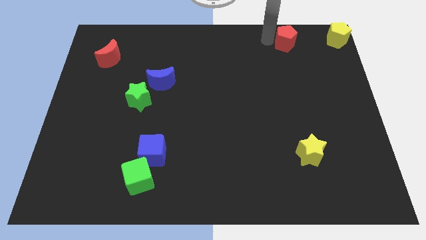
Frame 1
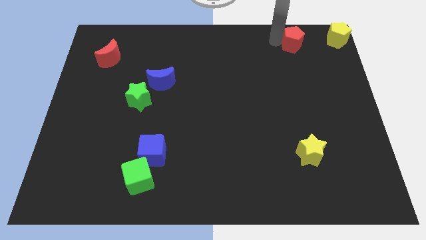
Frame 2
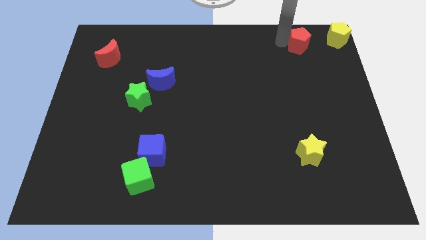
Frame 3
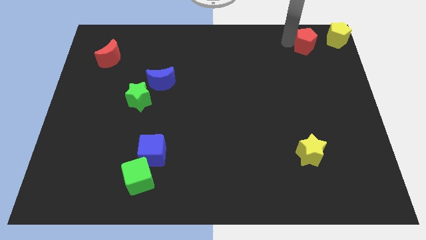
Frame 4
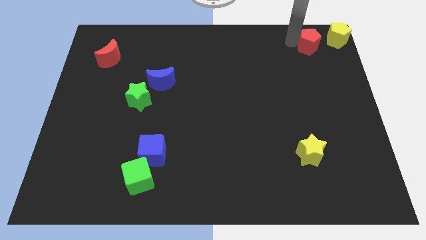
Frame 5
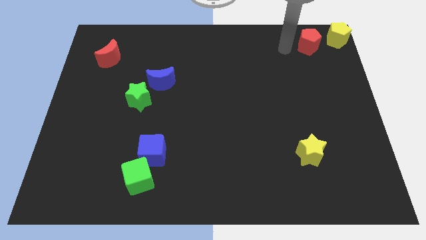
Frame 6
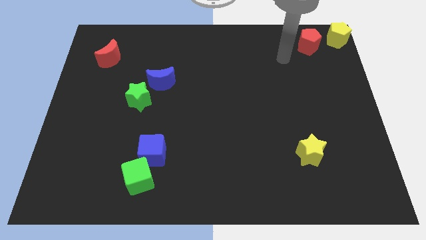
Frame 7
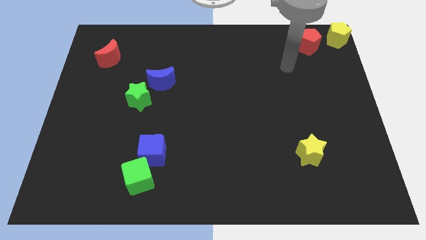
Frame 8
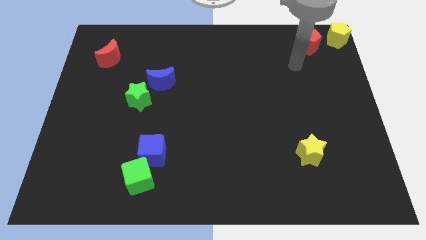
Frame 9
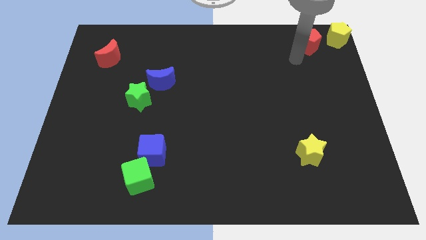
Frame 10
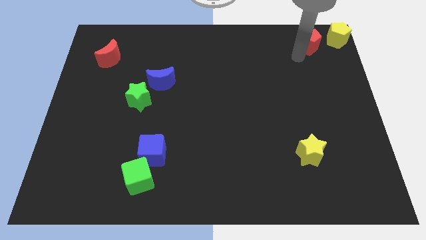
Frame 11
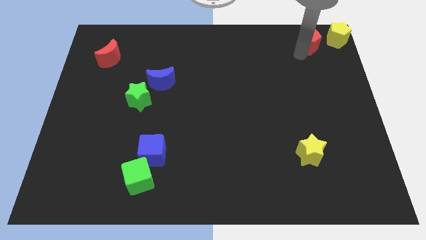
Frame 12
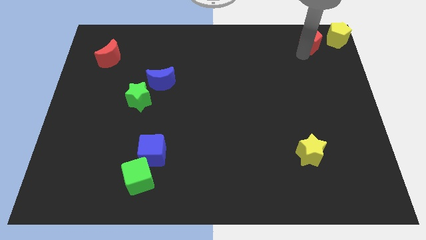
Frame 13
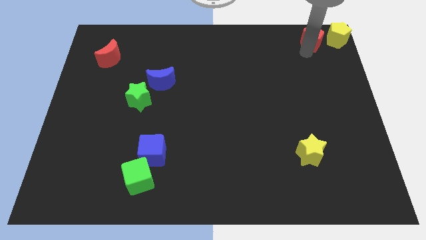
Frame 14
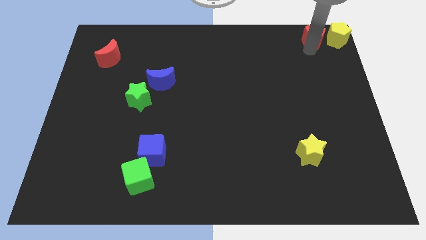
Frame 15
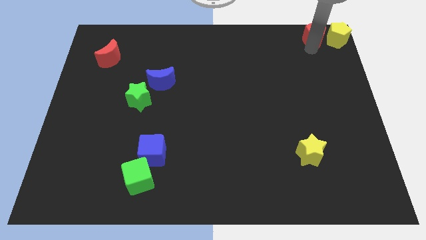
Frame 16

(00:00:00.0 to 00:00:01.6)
place the red pentagon to the left of the yellow pentagon

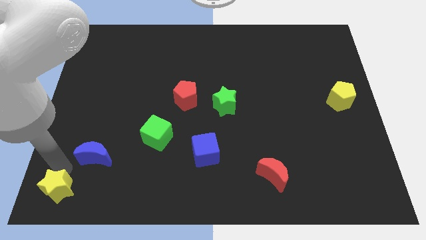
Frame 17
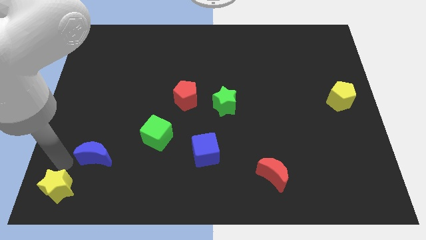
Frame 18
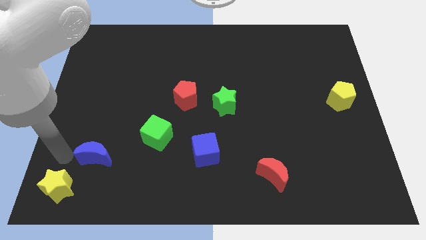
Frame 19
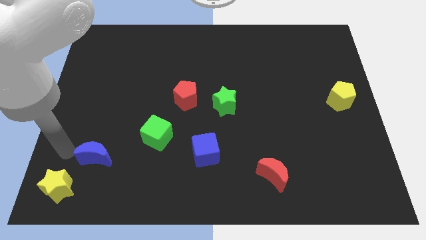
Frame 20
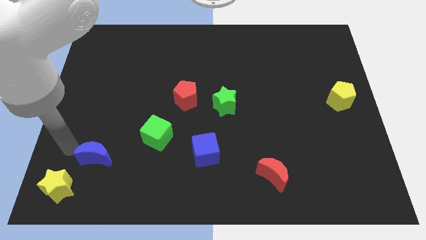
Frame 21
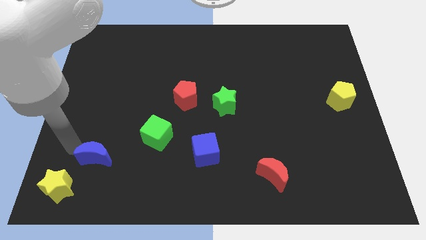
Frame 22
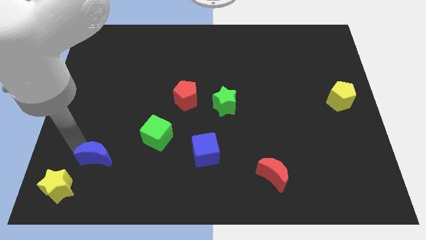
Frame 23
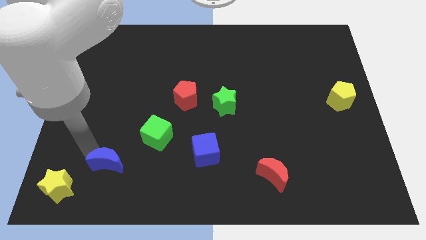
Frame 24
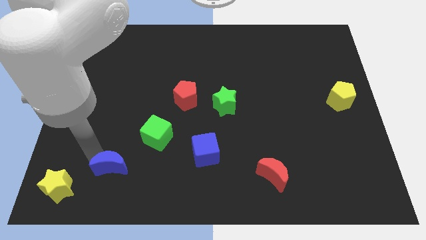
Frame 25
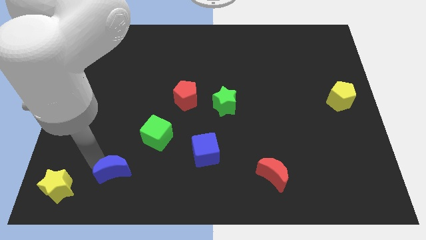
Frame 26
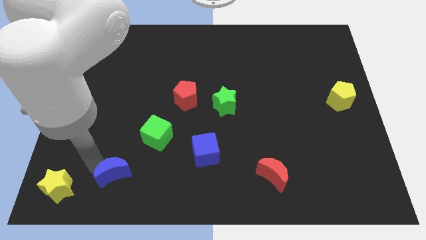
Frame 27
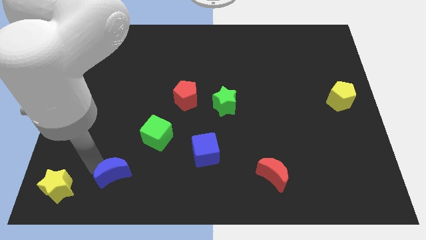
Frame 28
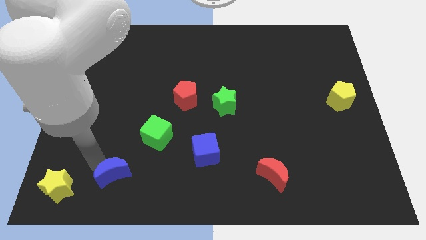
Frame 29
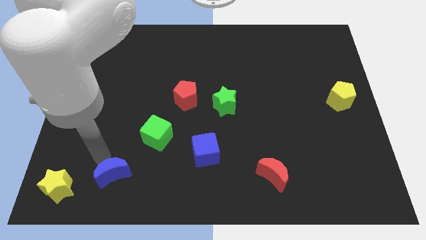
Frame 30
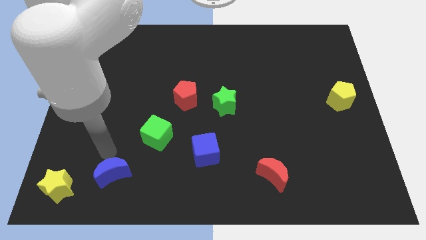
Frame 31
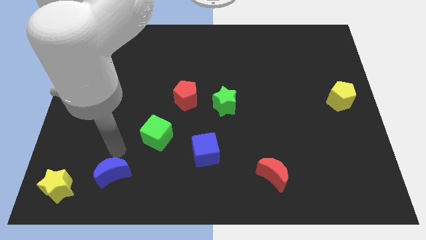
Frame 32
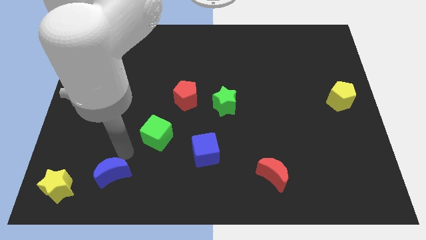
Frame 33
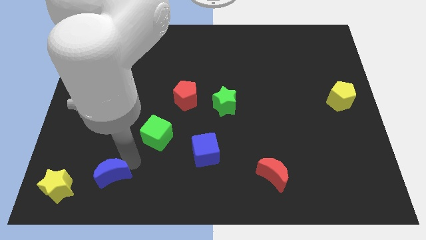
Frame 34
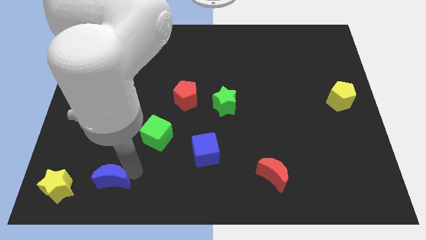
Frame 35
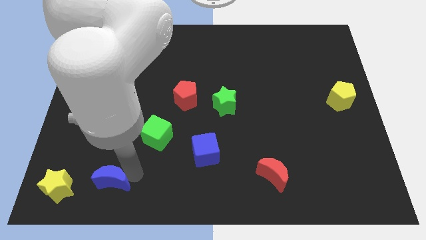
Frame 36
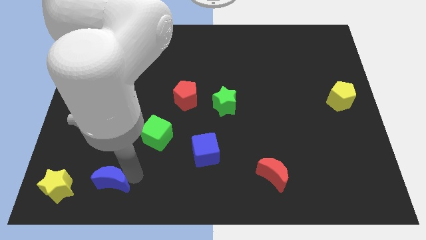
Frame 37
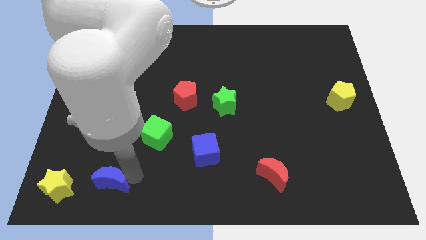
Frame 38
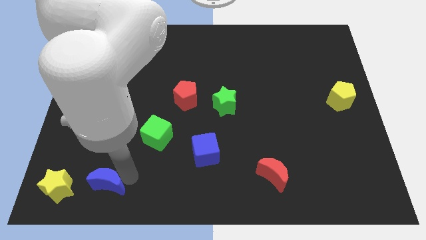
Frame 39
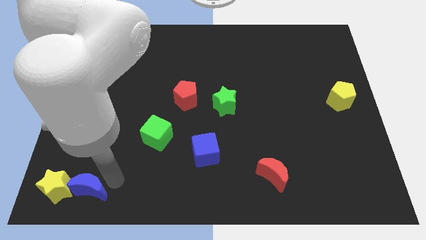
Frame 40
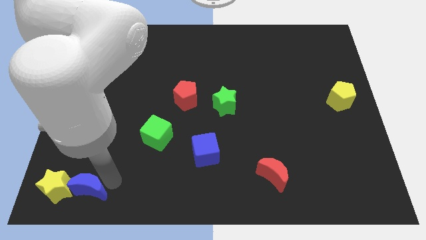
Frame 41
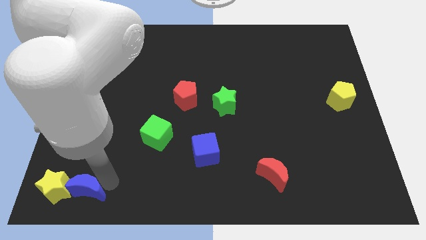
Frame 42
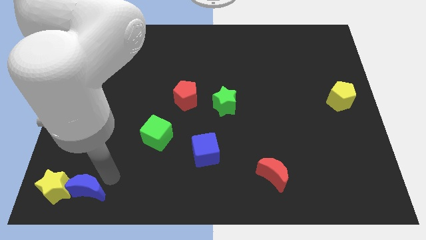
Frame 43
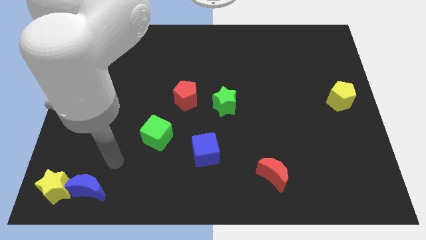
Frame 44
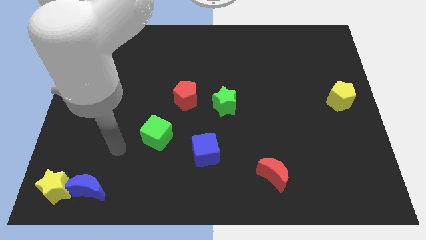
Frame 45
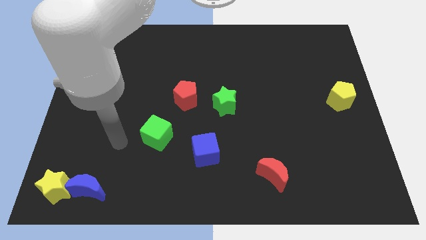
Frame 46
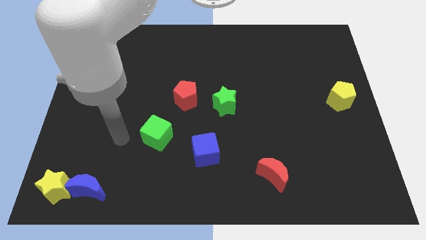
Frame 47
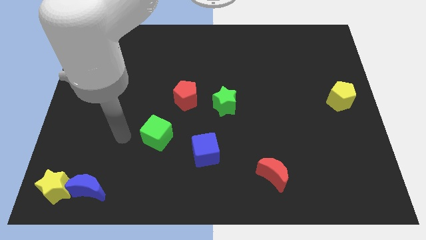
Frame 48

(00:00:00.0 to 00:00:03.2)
put the blue crescent on the right side of the yellow star

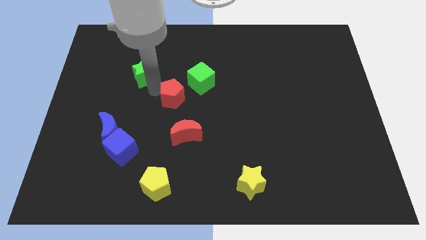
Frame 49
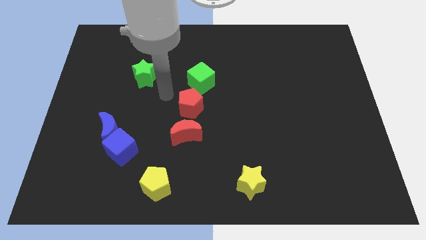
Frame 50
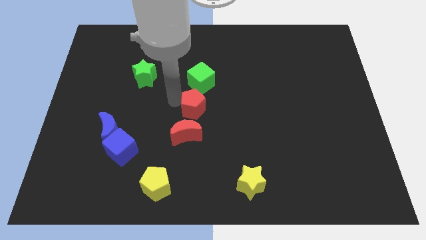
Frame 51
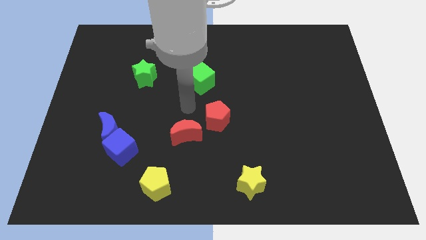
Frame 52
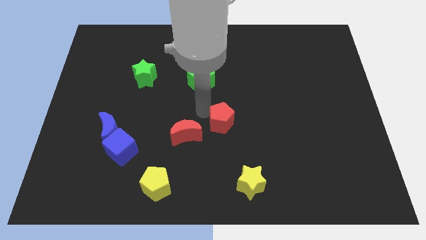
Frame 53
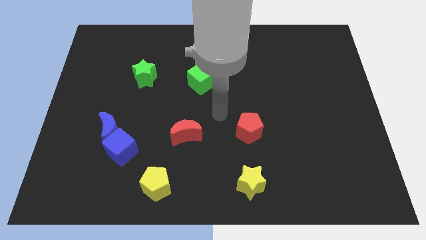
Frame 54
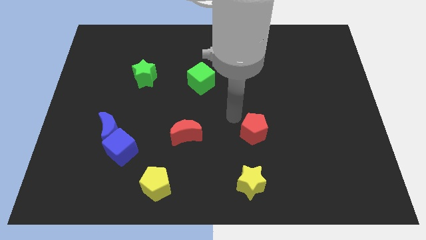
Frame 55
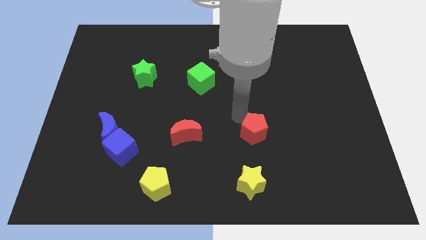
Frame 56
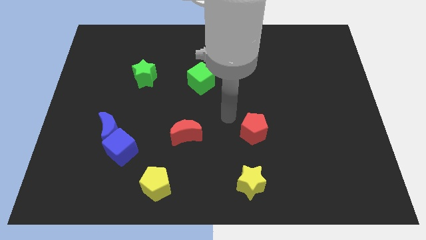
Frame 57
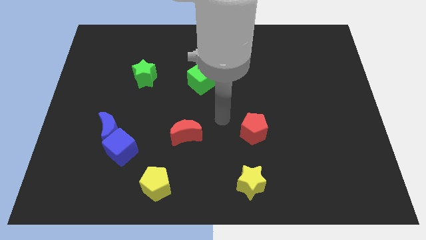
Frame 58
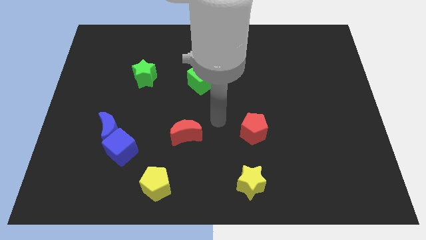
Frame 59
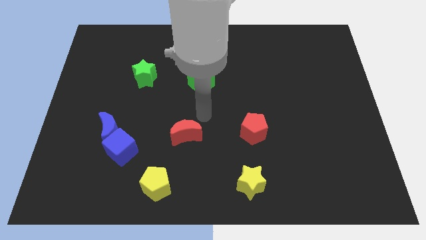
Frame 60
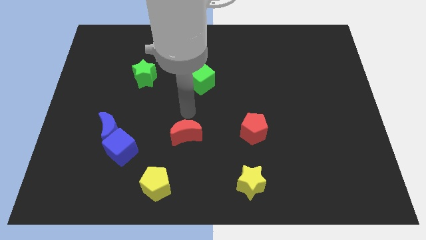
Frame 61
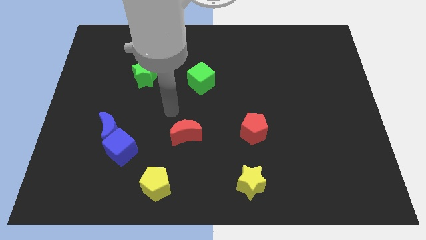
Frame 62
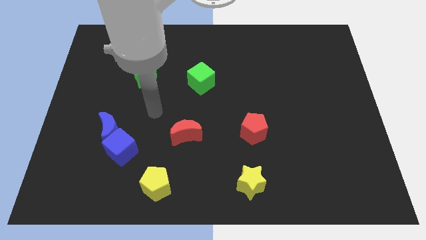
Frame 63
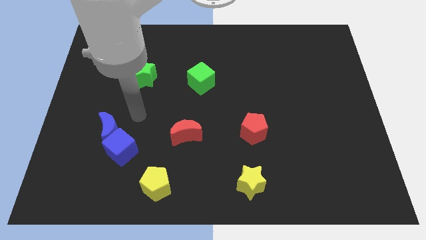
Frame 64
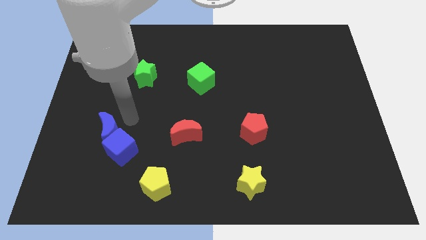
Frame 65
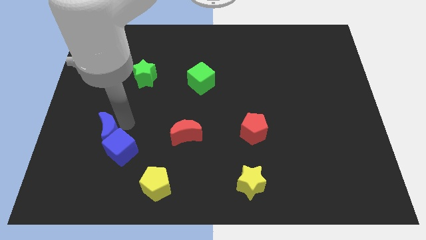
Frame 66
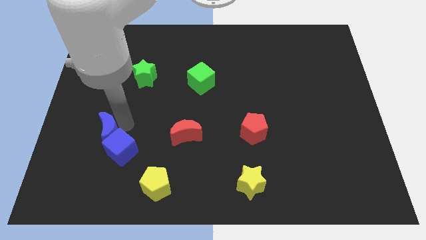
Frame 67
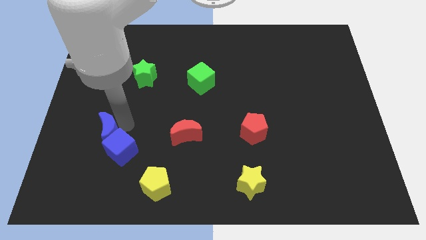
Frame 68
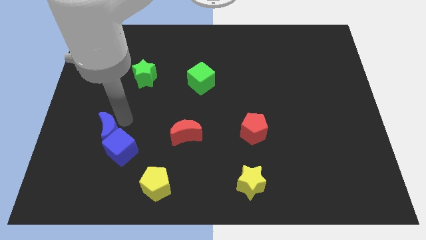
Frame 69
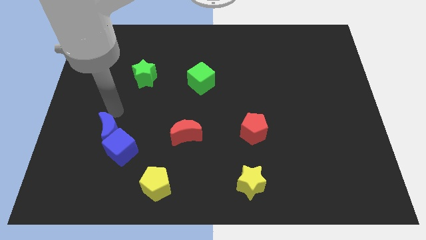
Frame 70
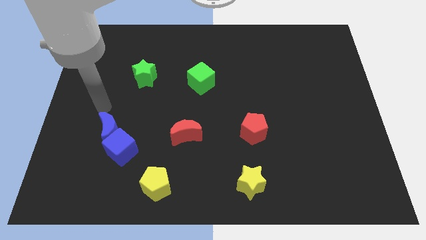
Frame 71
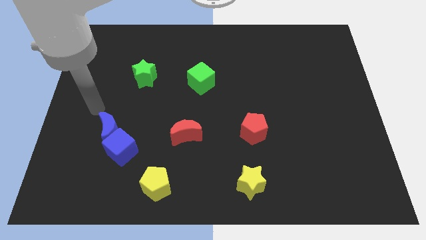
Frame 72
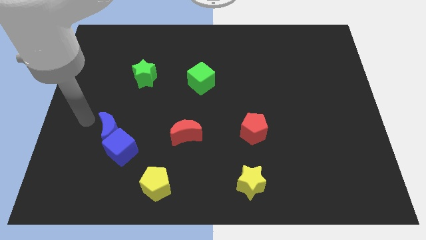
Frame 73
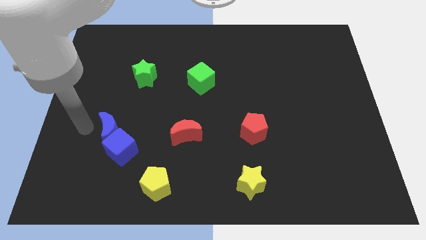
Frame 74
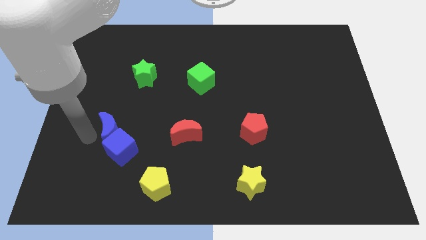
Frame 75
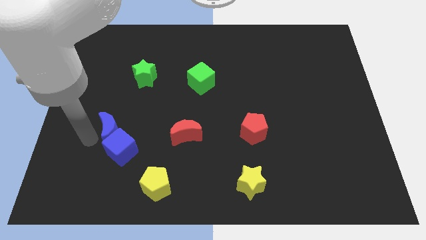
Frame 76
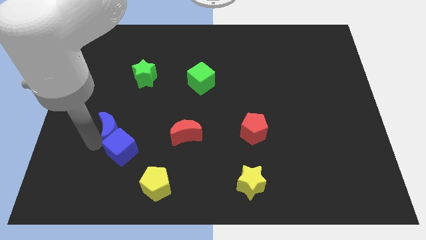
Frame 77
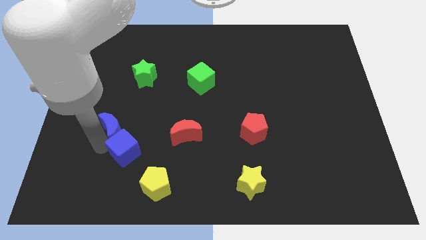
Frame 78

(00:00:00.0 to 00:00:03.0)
place the arm near the blue blocks

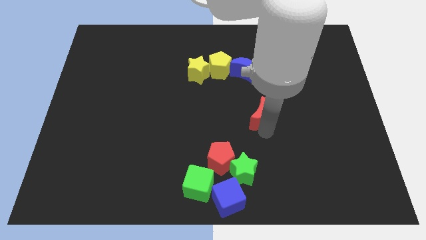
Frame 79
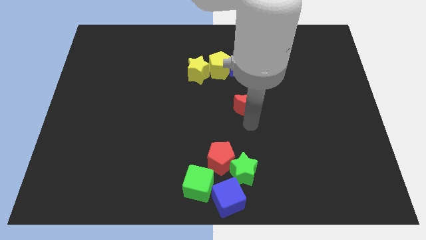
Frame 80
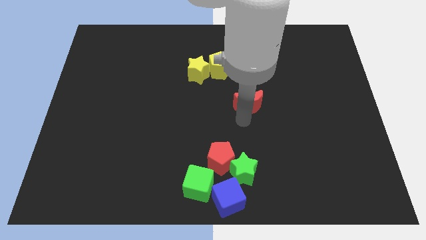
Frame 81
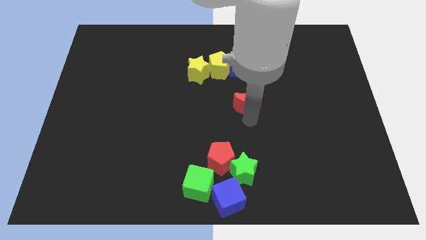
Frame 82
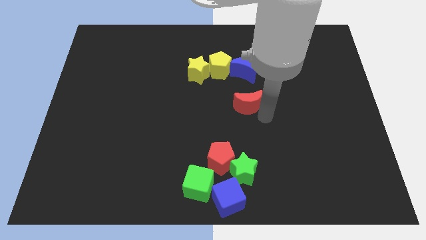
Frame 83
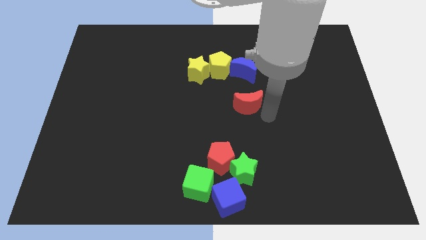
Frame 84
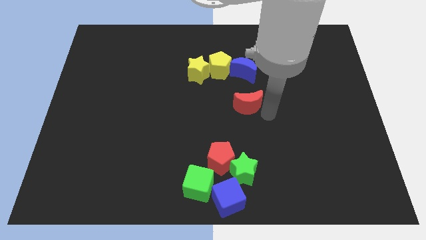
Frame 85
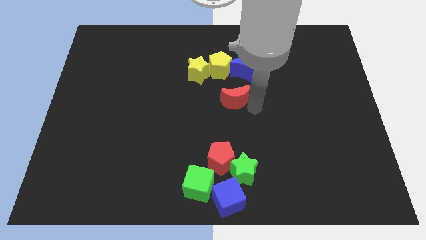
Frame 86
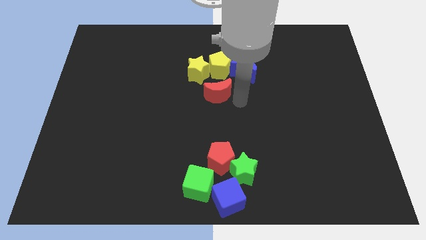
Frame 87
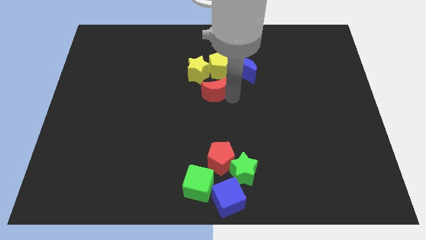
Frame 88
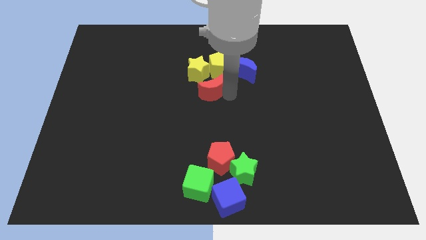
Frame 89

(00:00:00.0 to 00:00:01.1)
move the red crescent slightly bottom right of the yellow star

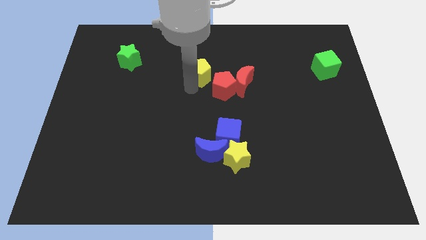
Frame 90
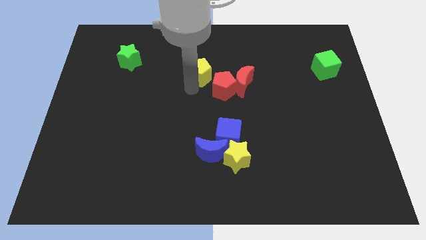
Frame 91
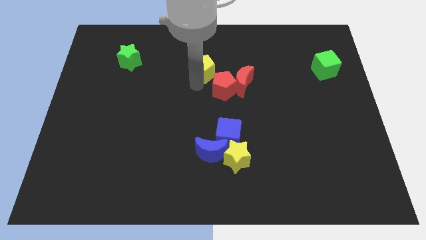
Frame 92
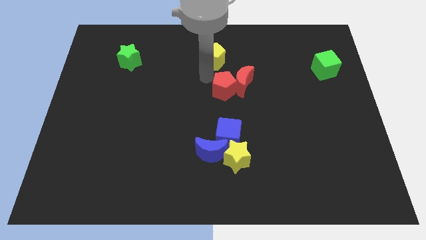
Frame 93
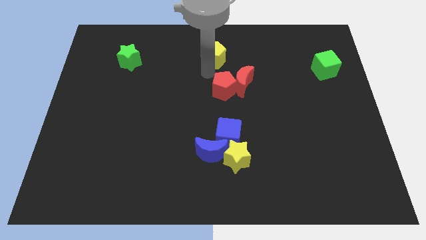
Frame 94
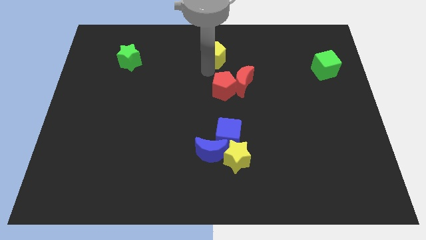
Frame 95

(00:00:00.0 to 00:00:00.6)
move the yellow pentagon slightly to the top
